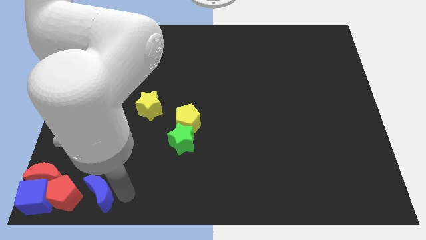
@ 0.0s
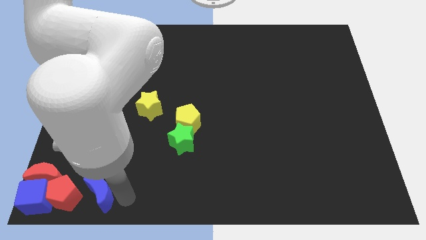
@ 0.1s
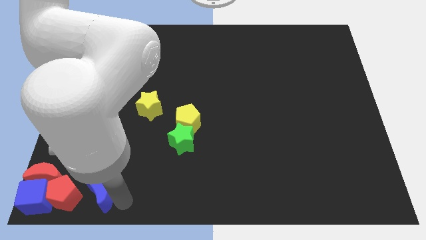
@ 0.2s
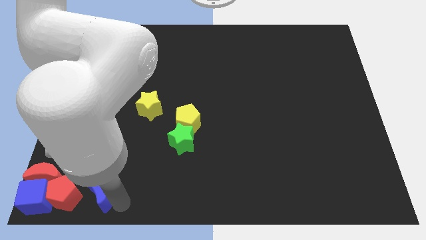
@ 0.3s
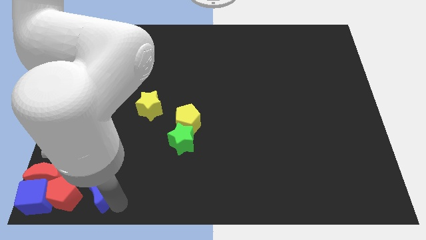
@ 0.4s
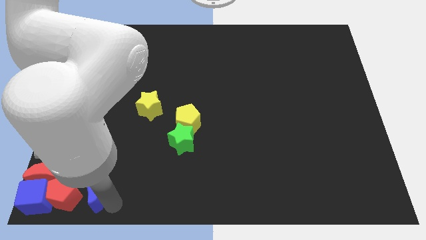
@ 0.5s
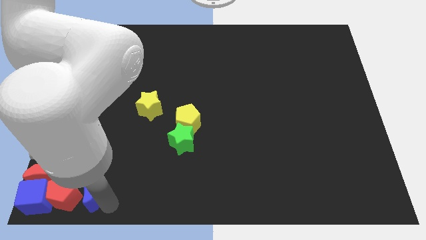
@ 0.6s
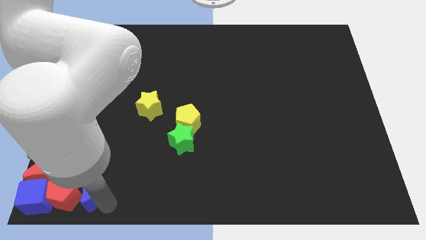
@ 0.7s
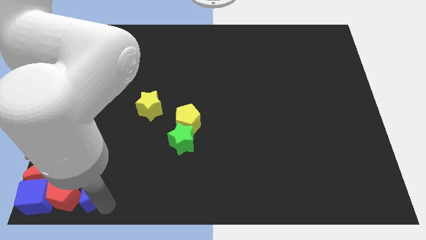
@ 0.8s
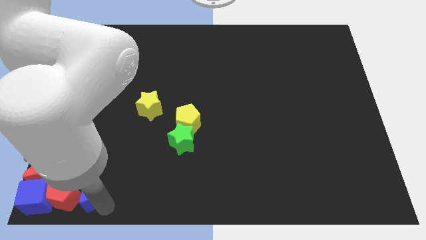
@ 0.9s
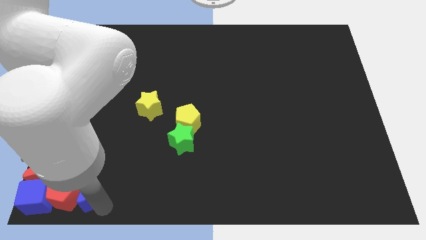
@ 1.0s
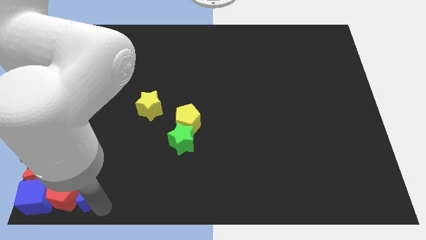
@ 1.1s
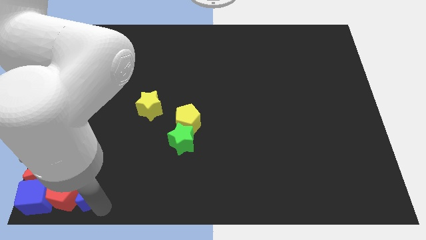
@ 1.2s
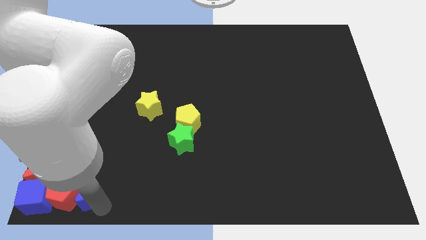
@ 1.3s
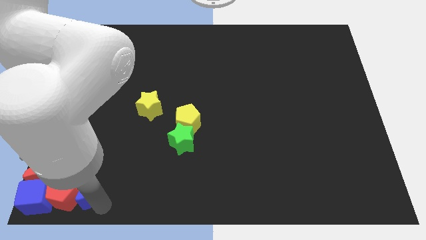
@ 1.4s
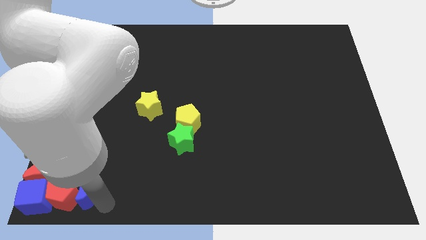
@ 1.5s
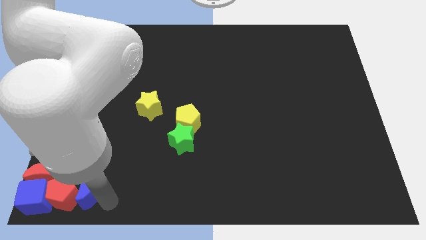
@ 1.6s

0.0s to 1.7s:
move the blue crescent close to the right of the red pentagon

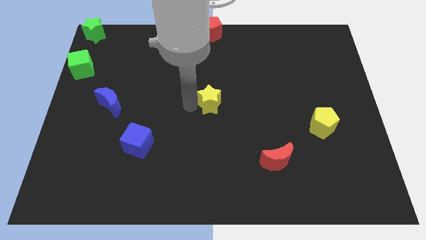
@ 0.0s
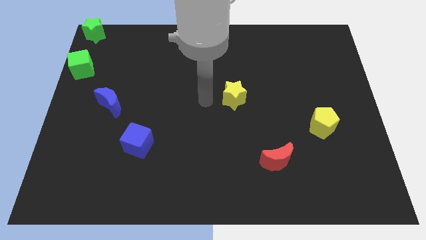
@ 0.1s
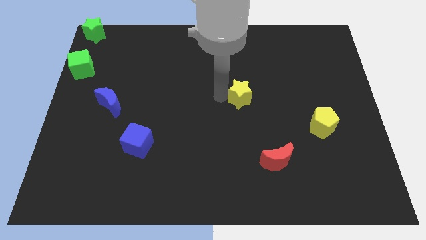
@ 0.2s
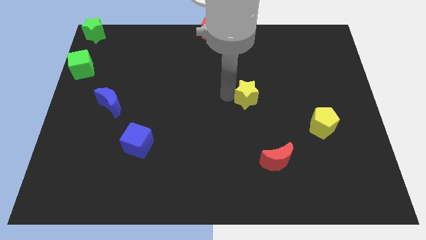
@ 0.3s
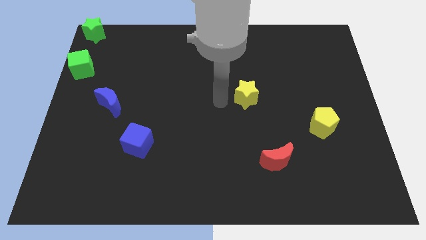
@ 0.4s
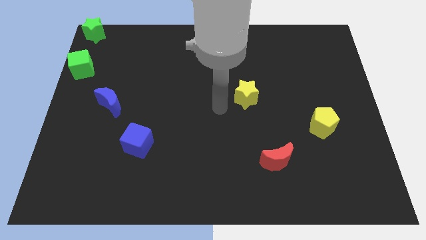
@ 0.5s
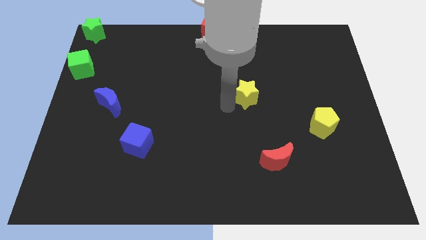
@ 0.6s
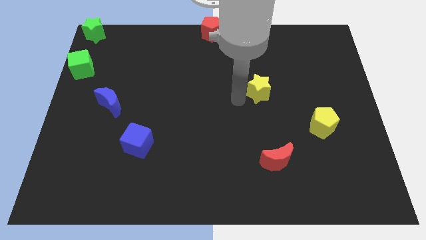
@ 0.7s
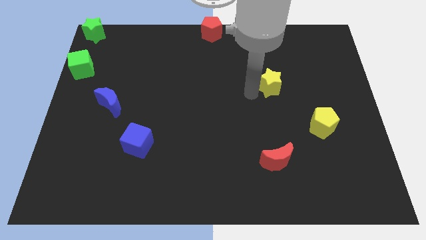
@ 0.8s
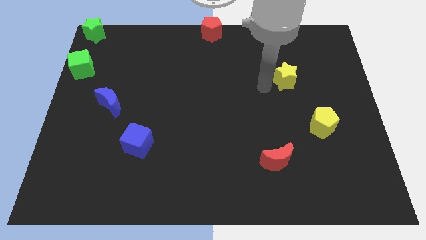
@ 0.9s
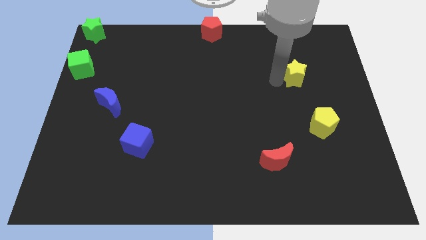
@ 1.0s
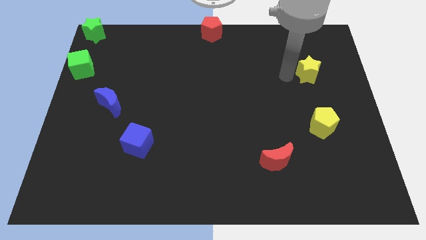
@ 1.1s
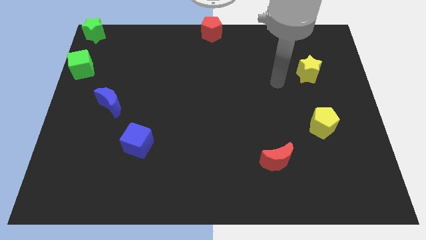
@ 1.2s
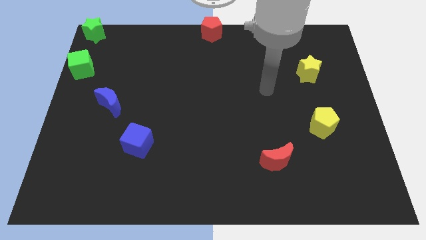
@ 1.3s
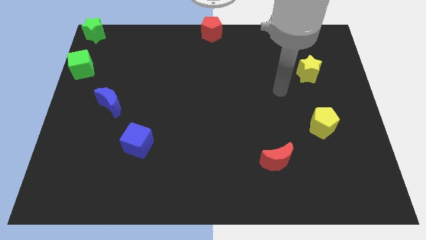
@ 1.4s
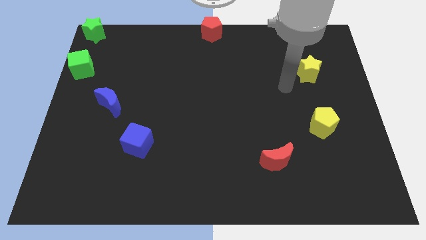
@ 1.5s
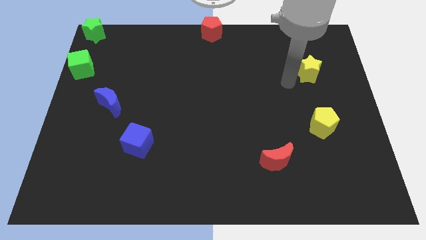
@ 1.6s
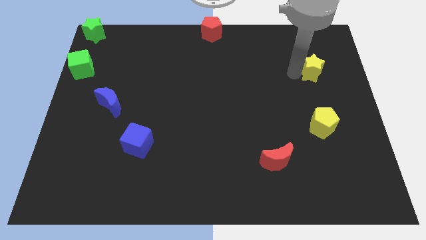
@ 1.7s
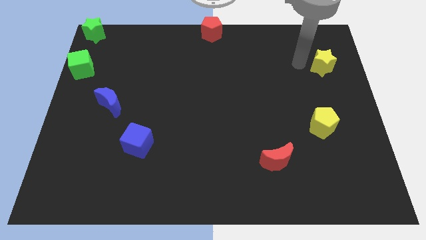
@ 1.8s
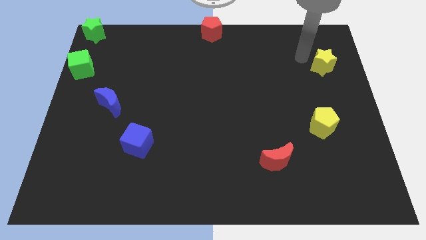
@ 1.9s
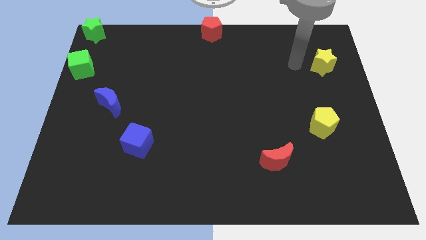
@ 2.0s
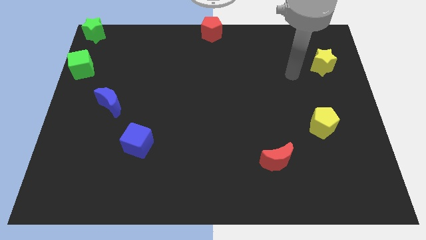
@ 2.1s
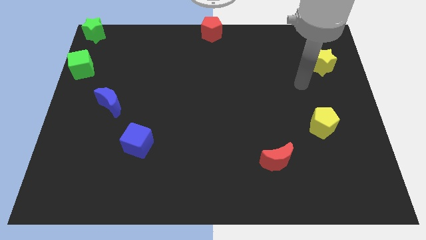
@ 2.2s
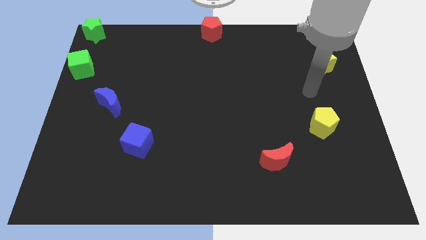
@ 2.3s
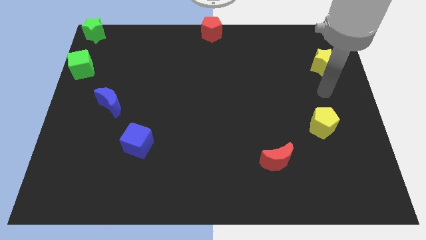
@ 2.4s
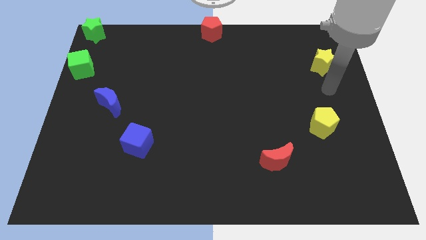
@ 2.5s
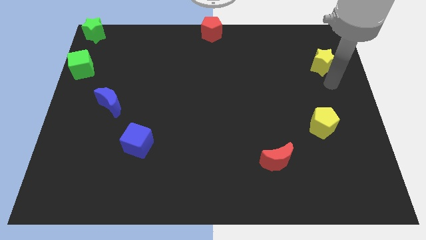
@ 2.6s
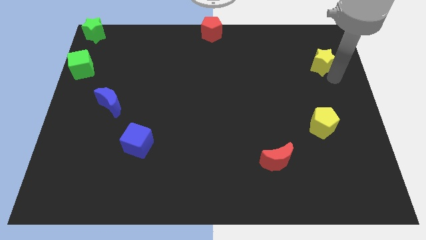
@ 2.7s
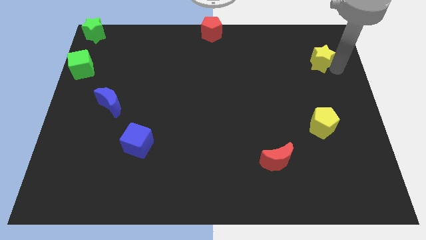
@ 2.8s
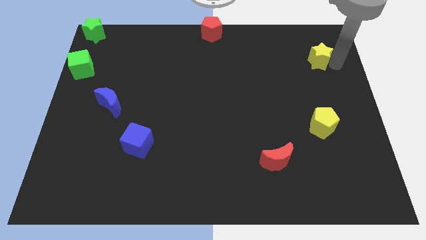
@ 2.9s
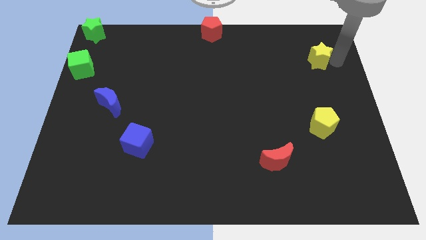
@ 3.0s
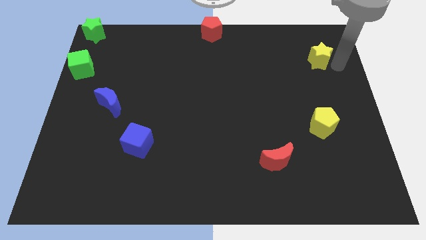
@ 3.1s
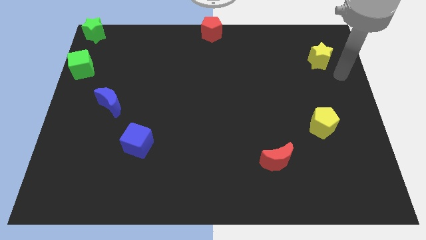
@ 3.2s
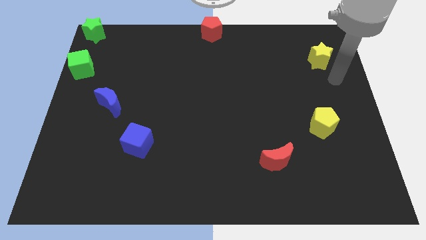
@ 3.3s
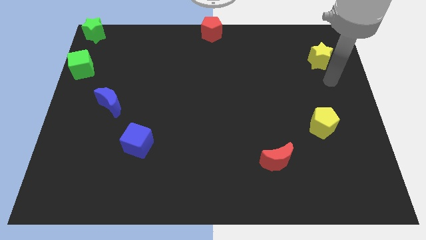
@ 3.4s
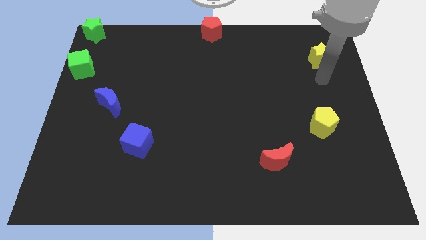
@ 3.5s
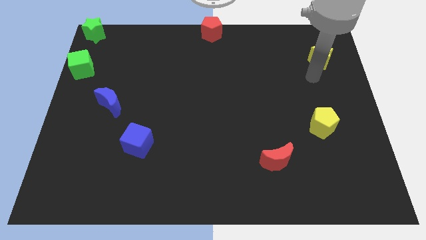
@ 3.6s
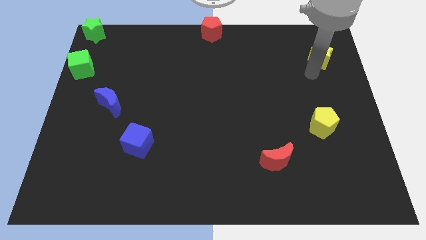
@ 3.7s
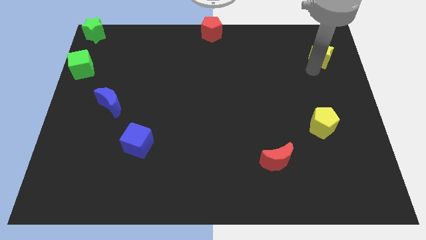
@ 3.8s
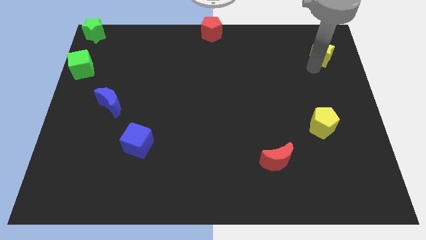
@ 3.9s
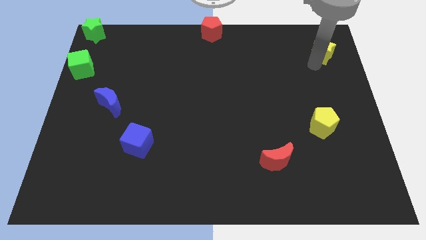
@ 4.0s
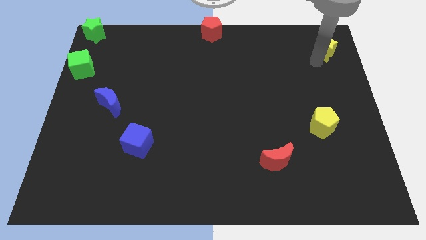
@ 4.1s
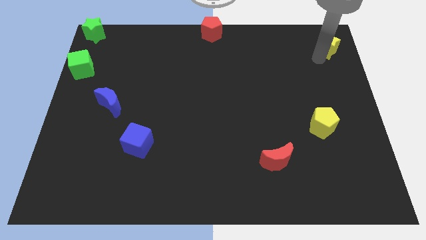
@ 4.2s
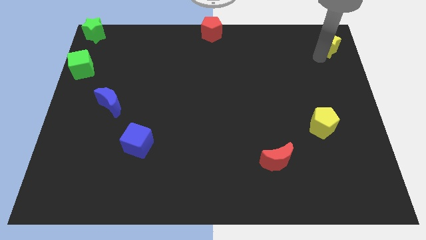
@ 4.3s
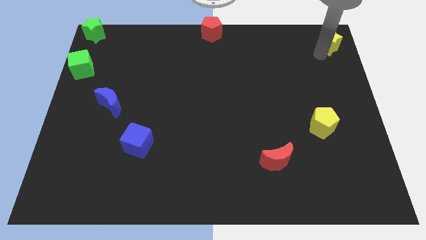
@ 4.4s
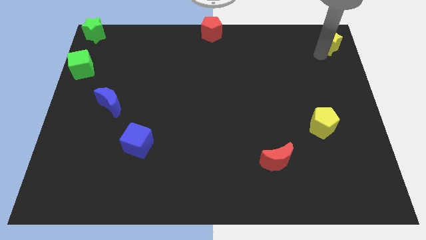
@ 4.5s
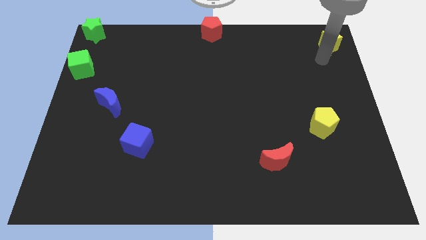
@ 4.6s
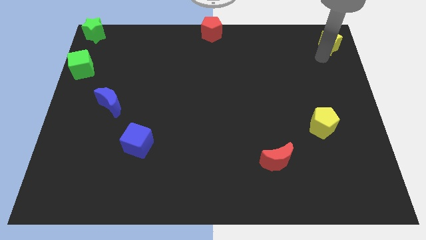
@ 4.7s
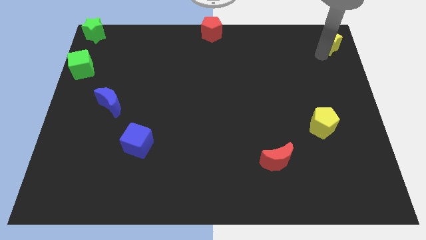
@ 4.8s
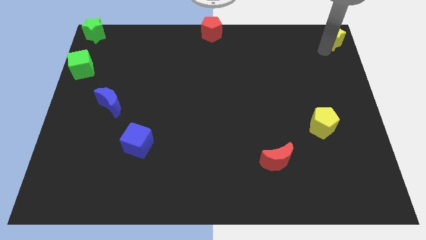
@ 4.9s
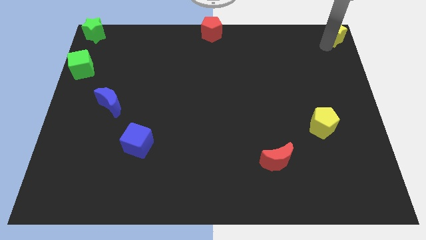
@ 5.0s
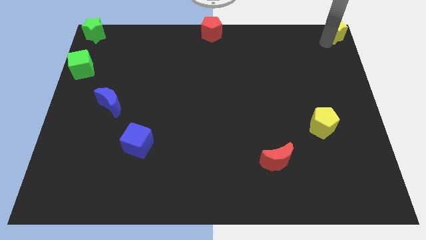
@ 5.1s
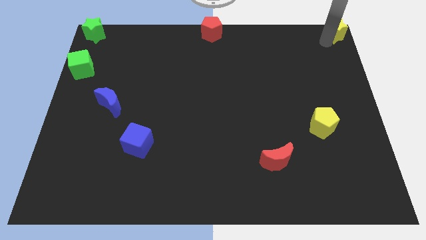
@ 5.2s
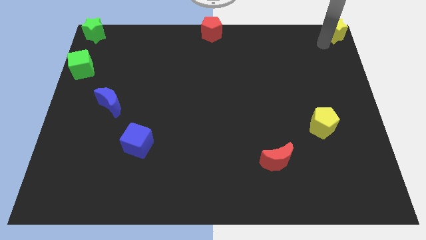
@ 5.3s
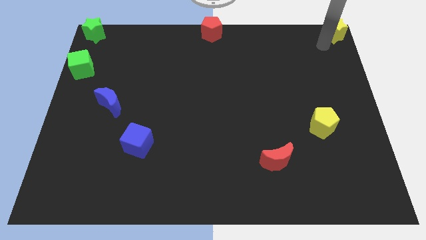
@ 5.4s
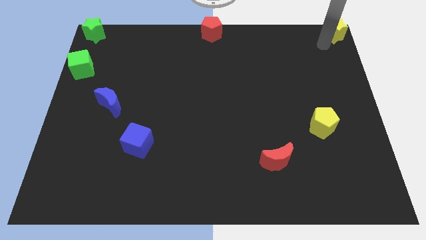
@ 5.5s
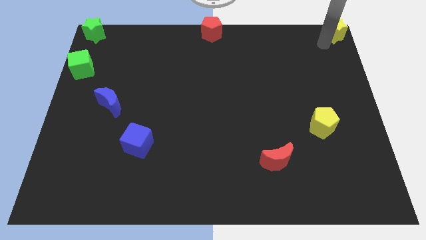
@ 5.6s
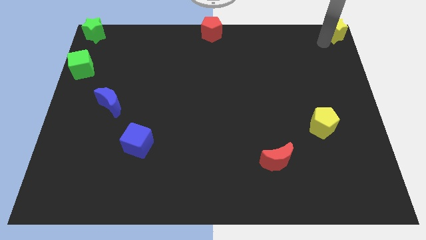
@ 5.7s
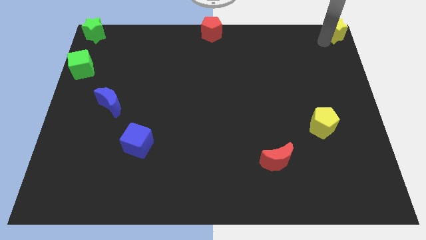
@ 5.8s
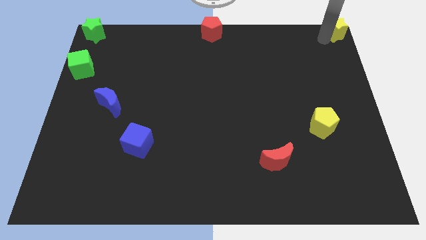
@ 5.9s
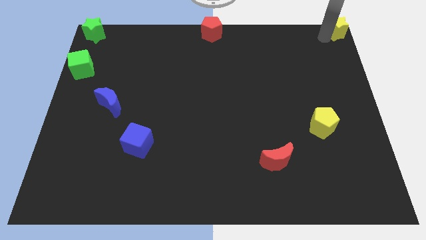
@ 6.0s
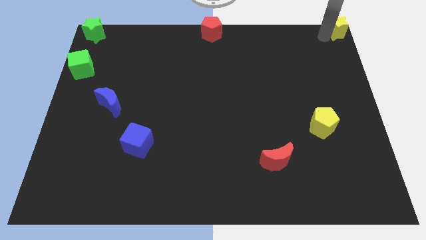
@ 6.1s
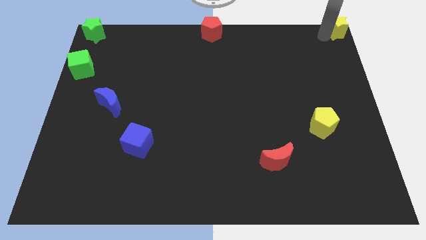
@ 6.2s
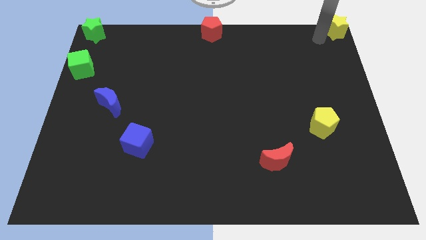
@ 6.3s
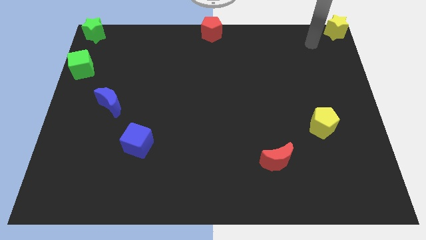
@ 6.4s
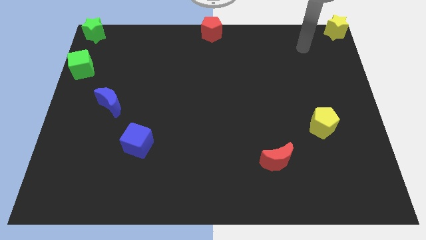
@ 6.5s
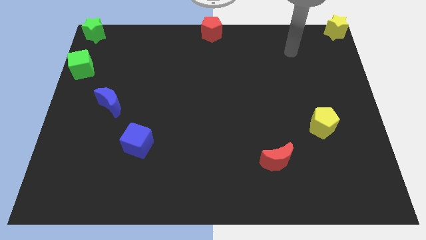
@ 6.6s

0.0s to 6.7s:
put the yellow star at the top right corner

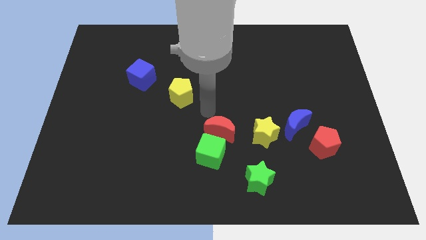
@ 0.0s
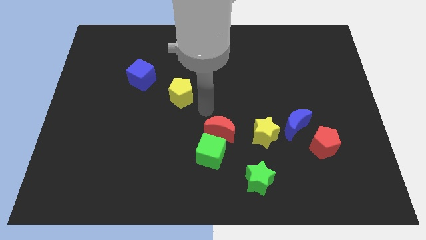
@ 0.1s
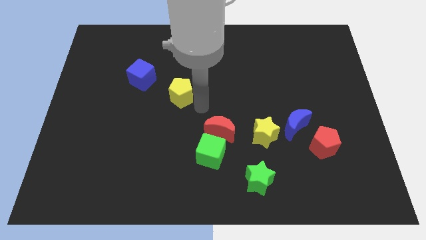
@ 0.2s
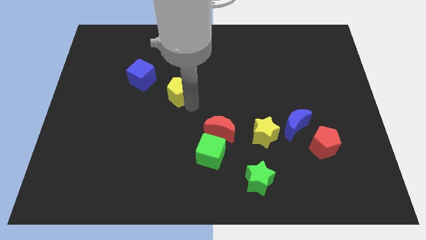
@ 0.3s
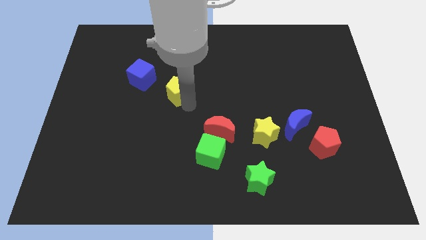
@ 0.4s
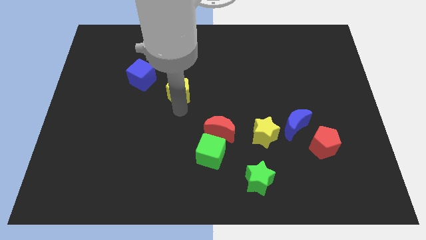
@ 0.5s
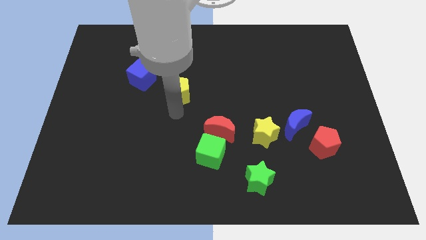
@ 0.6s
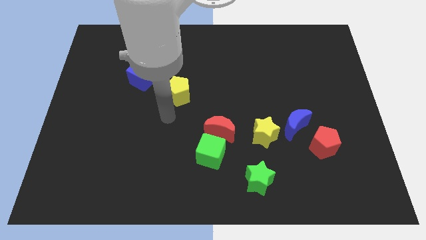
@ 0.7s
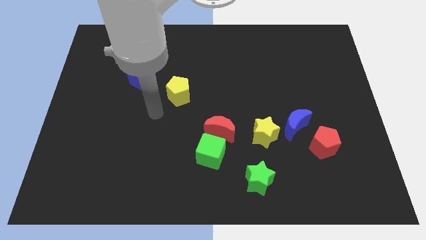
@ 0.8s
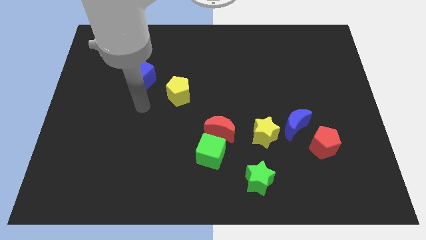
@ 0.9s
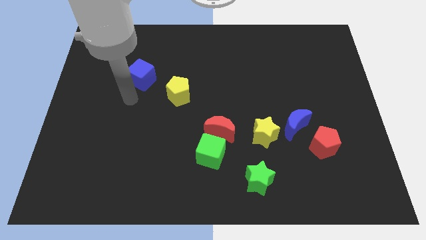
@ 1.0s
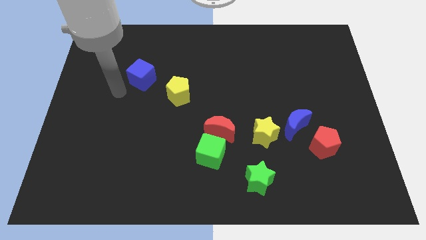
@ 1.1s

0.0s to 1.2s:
push the yellow pentagon slightly to the top side of the board
